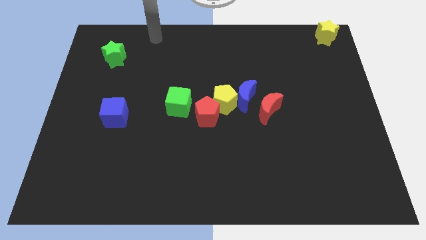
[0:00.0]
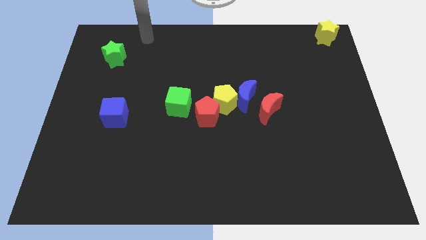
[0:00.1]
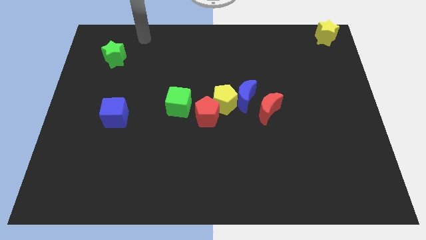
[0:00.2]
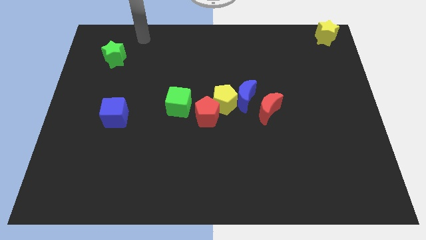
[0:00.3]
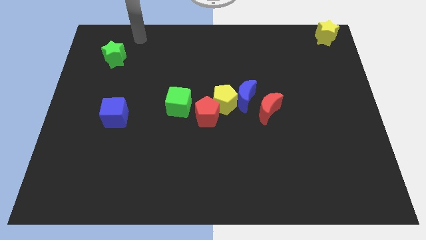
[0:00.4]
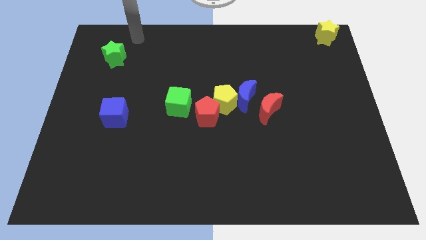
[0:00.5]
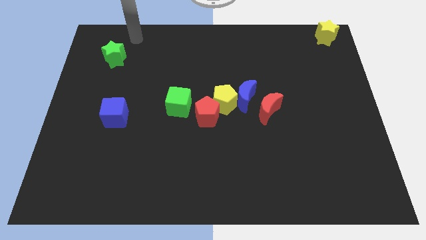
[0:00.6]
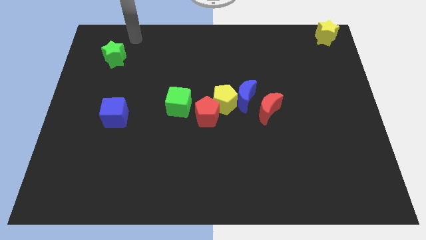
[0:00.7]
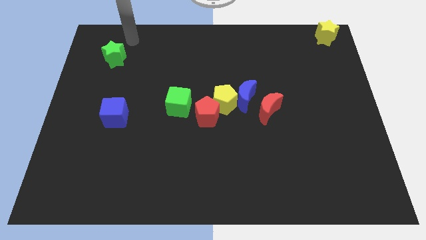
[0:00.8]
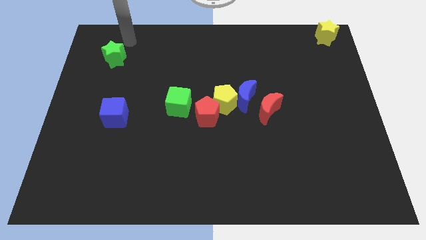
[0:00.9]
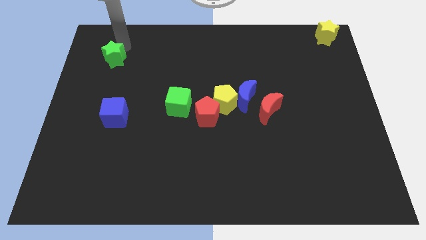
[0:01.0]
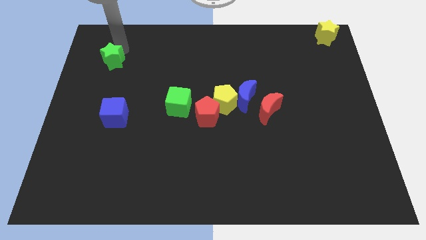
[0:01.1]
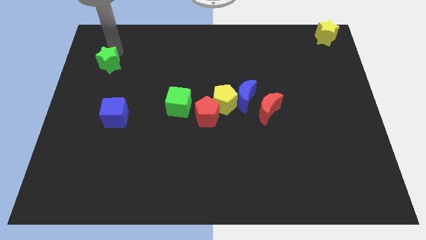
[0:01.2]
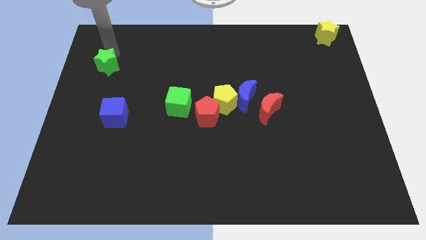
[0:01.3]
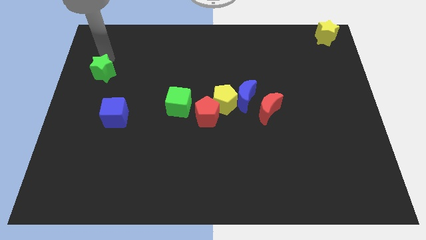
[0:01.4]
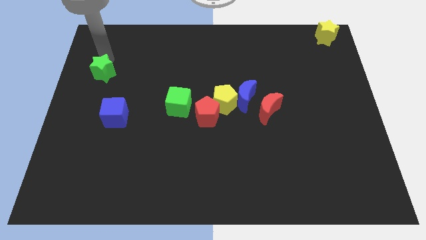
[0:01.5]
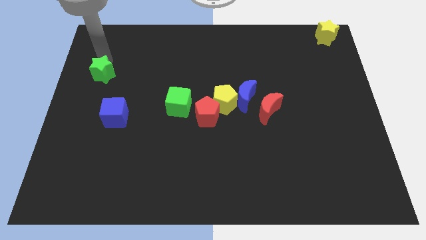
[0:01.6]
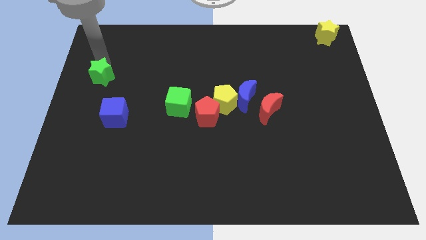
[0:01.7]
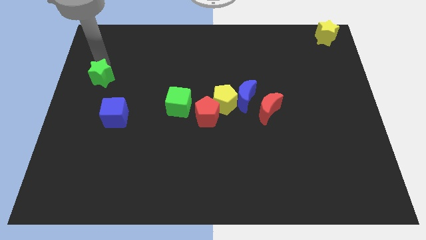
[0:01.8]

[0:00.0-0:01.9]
drag the green star towards the top side of the blue cube

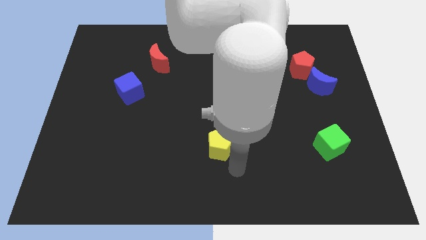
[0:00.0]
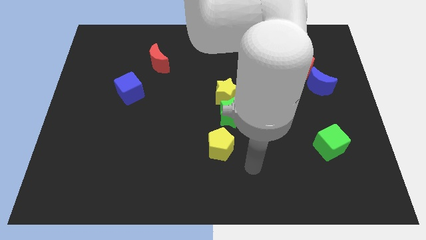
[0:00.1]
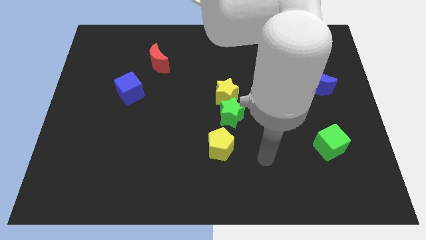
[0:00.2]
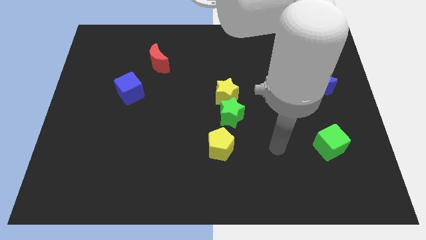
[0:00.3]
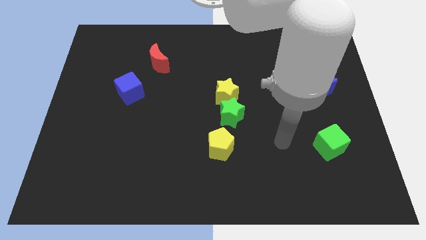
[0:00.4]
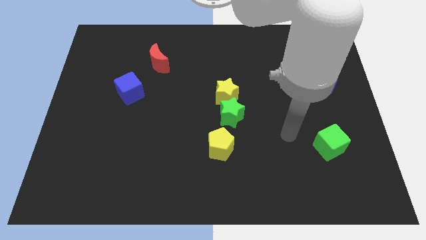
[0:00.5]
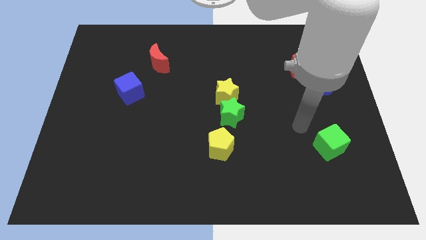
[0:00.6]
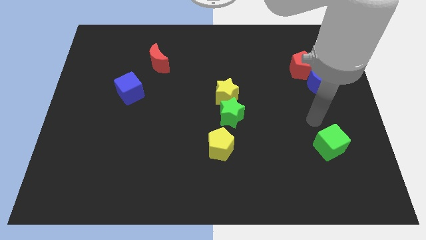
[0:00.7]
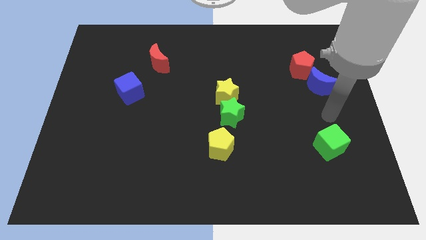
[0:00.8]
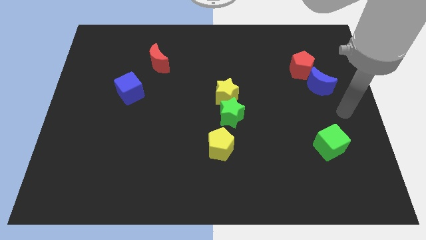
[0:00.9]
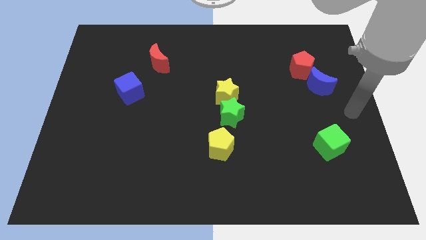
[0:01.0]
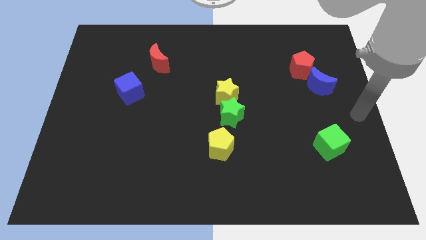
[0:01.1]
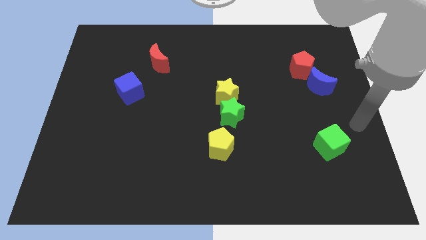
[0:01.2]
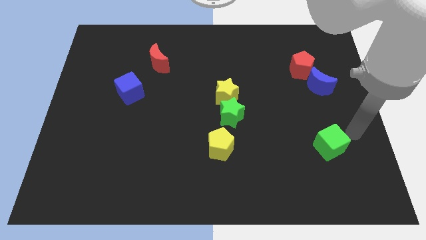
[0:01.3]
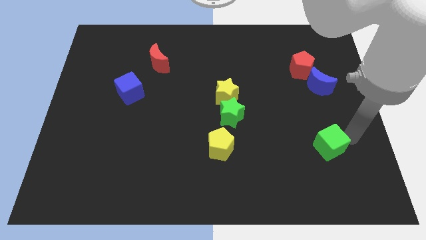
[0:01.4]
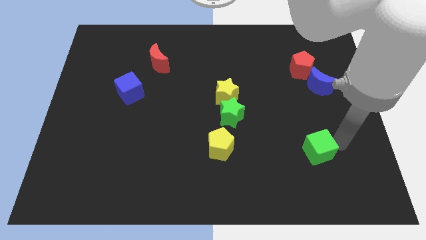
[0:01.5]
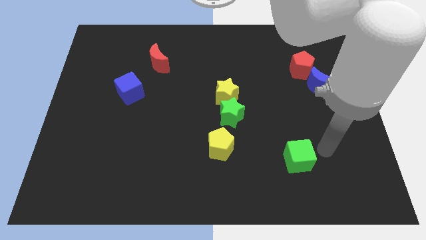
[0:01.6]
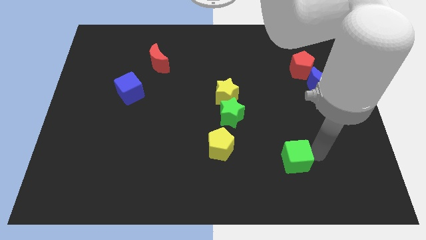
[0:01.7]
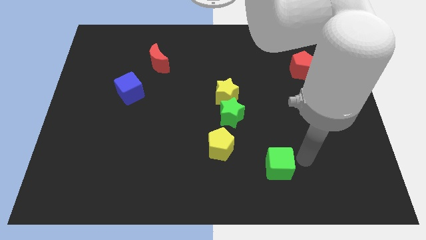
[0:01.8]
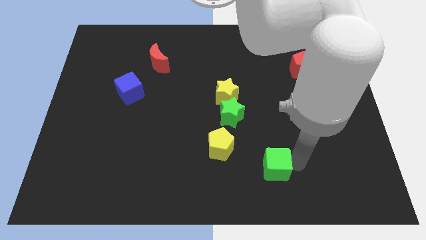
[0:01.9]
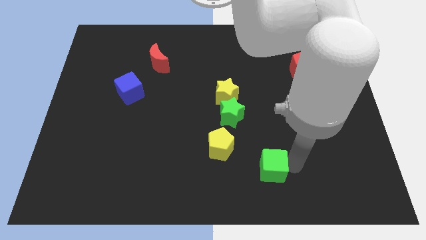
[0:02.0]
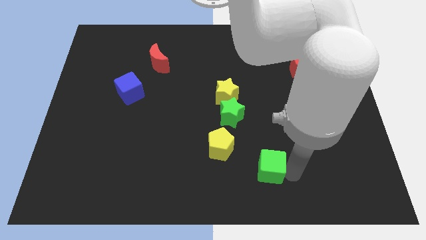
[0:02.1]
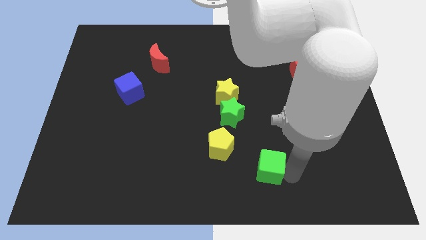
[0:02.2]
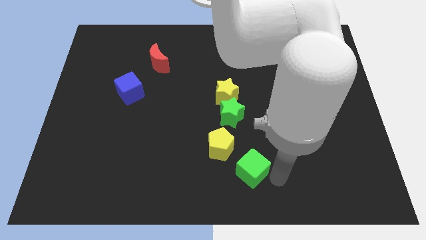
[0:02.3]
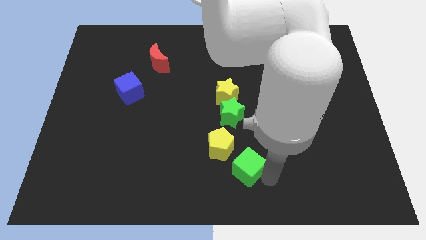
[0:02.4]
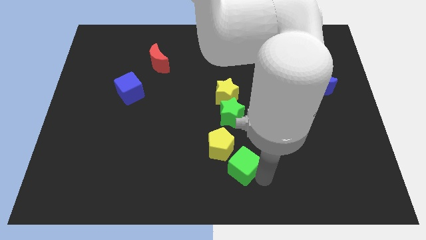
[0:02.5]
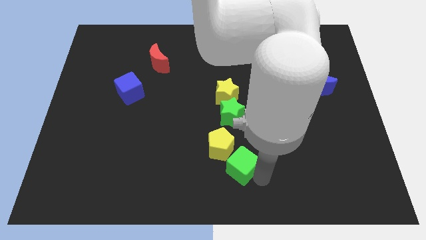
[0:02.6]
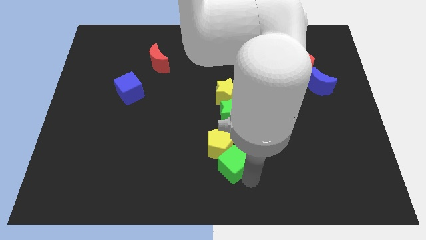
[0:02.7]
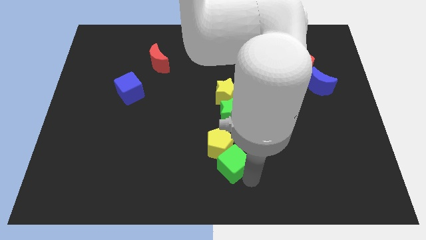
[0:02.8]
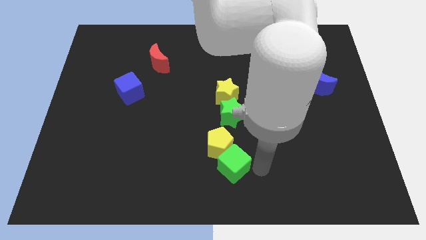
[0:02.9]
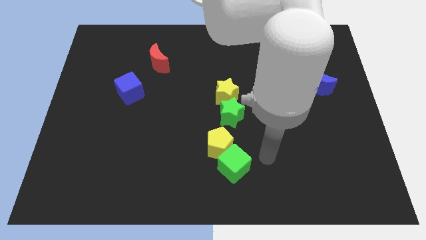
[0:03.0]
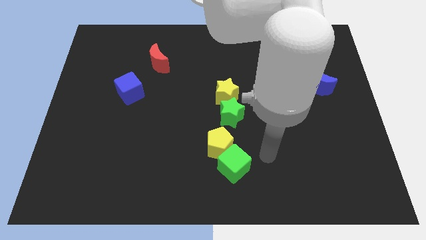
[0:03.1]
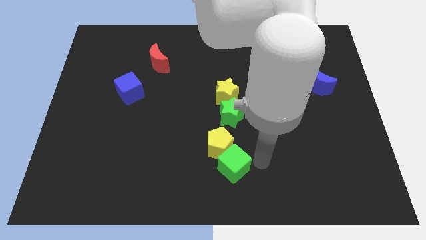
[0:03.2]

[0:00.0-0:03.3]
push the green cube into the yellow pentagon

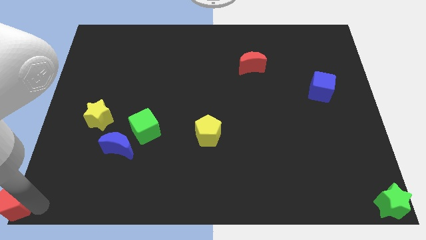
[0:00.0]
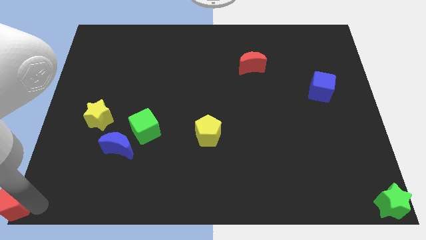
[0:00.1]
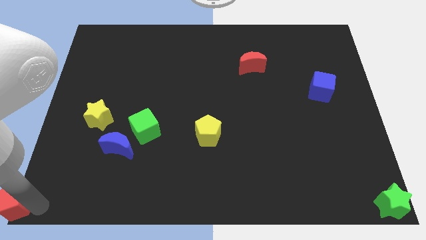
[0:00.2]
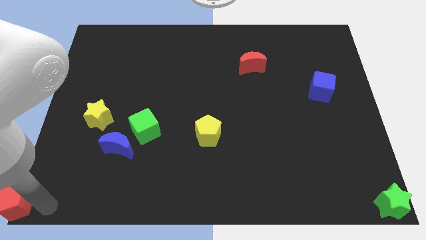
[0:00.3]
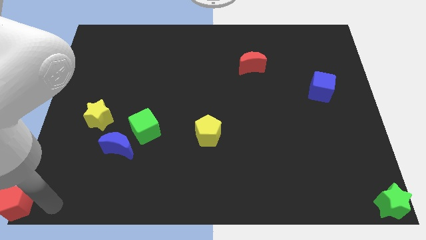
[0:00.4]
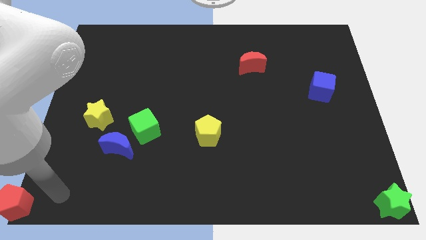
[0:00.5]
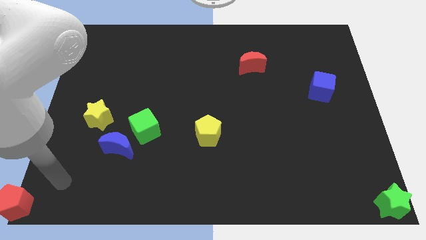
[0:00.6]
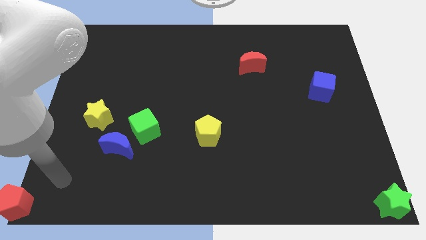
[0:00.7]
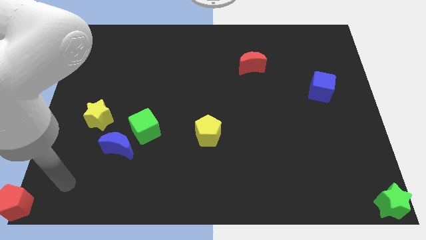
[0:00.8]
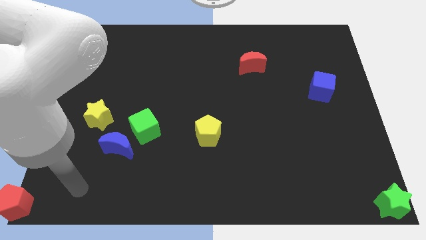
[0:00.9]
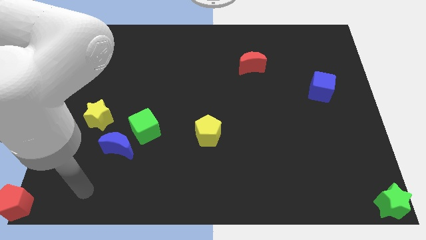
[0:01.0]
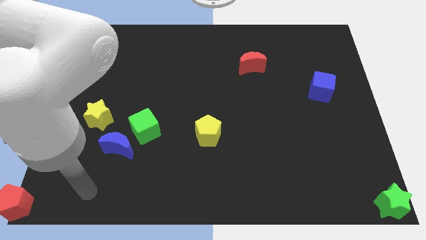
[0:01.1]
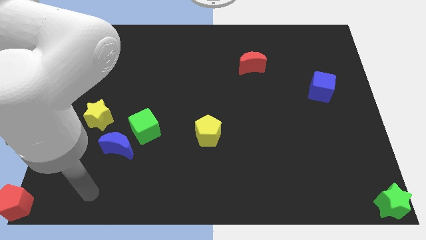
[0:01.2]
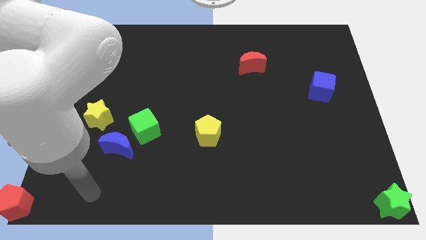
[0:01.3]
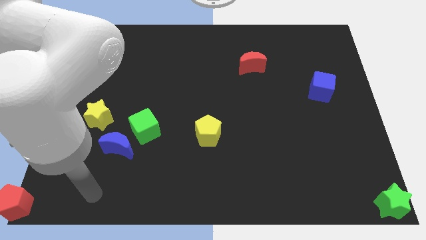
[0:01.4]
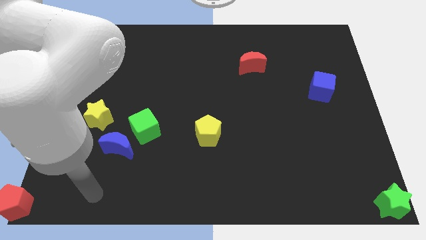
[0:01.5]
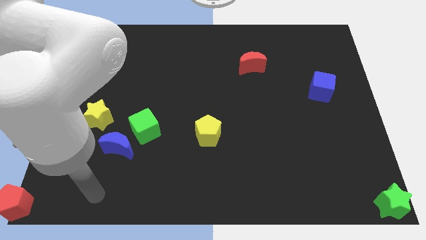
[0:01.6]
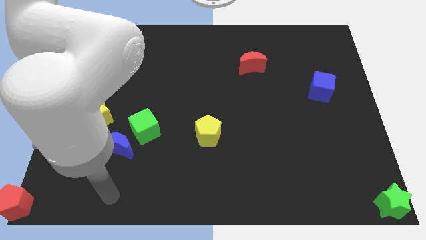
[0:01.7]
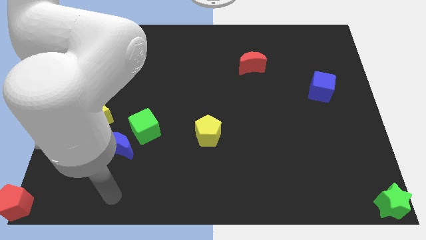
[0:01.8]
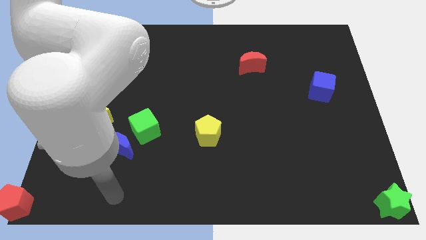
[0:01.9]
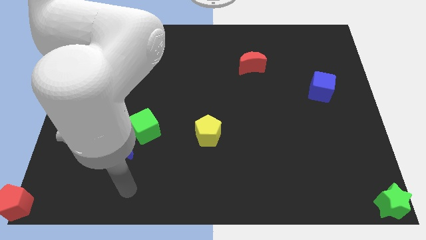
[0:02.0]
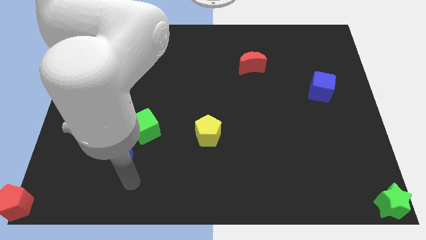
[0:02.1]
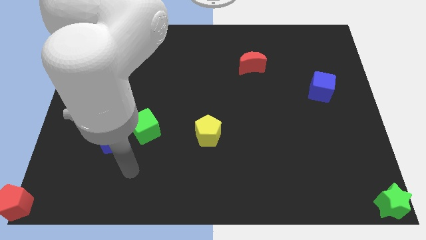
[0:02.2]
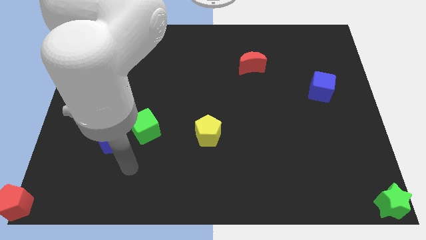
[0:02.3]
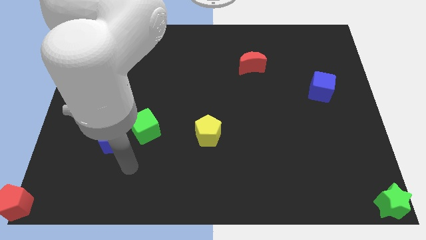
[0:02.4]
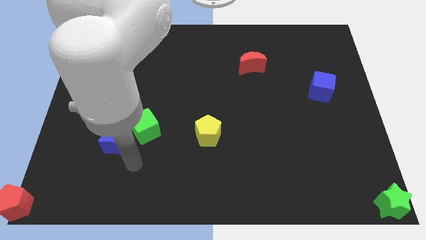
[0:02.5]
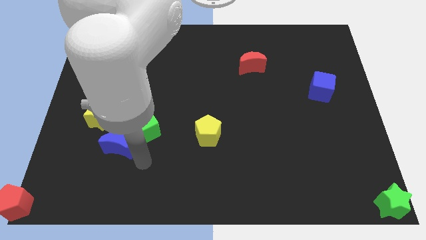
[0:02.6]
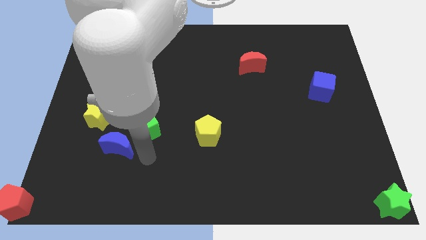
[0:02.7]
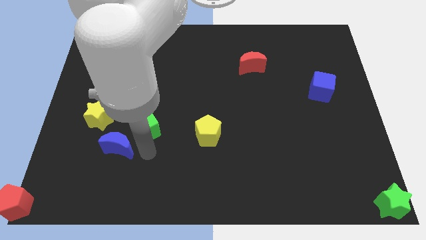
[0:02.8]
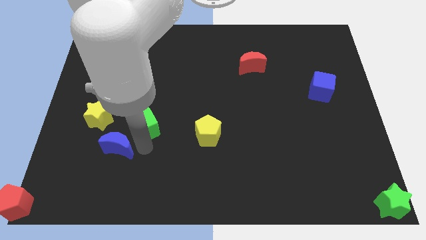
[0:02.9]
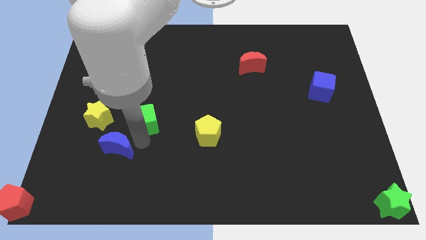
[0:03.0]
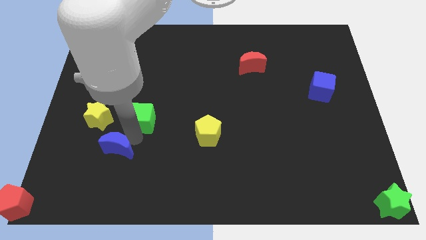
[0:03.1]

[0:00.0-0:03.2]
move your arm close to the green cube

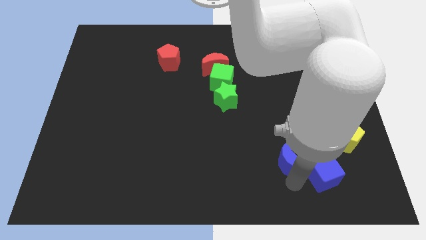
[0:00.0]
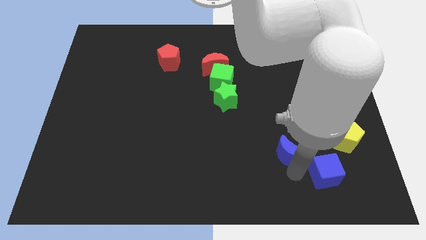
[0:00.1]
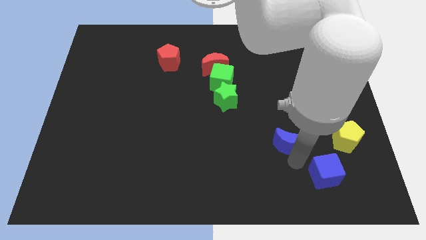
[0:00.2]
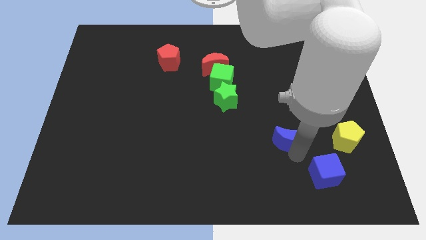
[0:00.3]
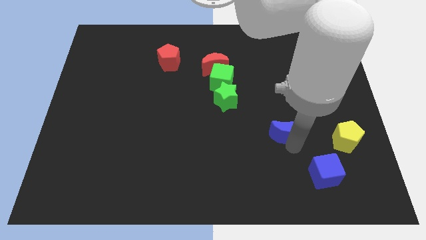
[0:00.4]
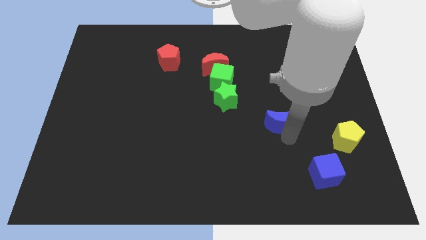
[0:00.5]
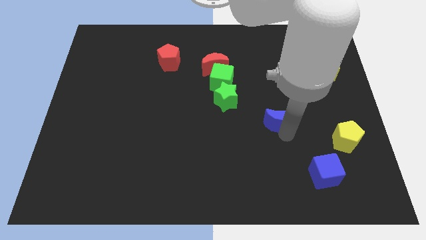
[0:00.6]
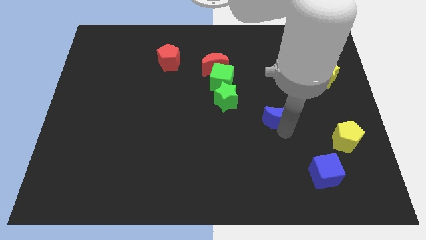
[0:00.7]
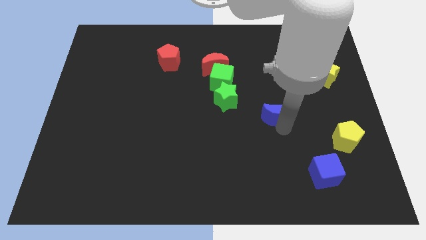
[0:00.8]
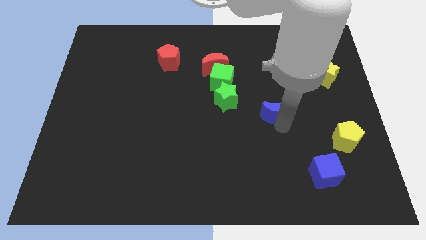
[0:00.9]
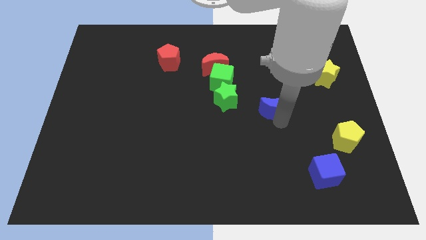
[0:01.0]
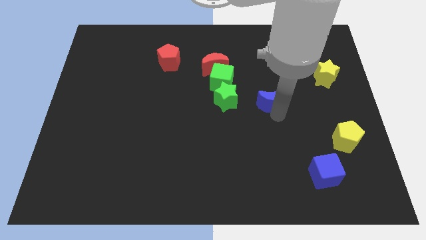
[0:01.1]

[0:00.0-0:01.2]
move the blue moon right to the green star
